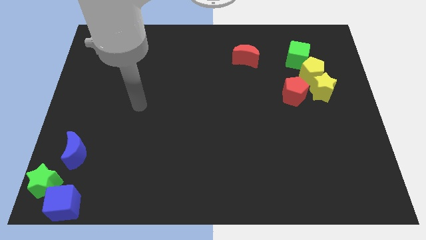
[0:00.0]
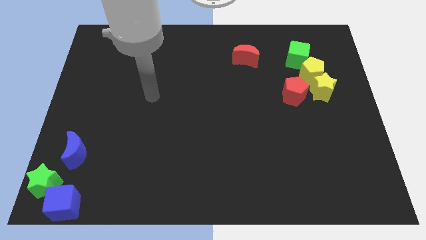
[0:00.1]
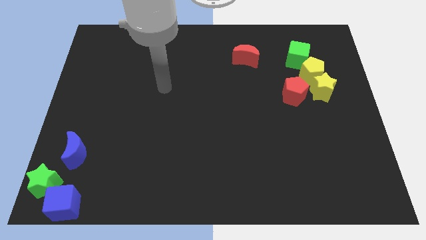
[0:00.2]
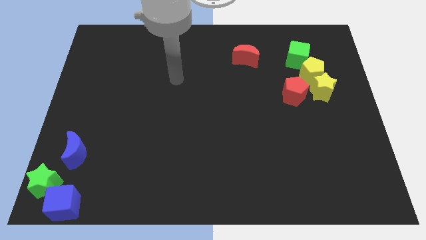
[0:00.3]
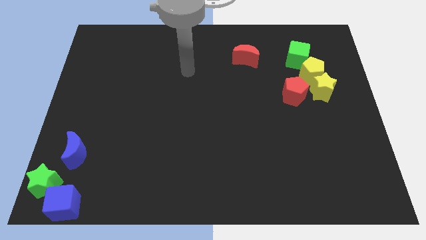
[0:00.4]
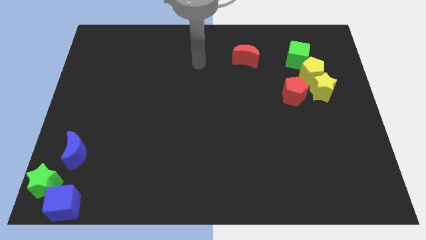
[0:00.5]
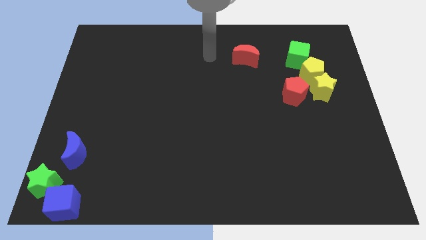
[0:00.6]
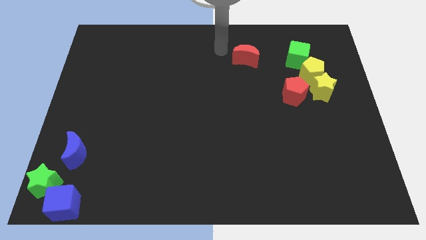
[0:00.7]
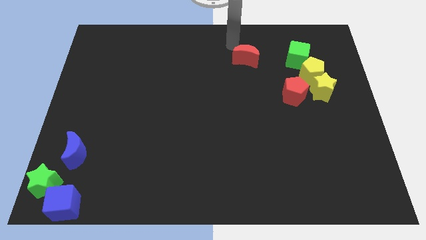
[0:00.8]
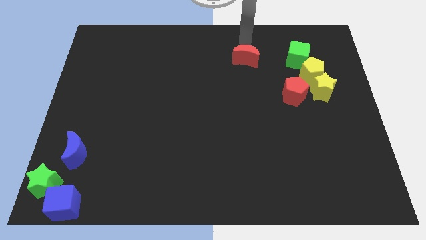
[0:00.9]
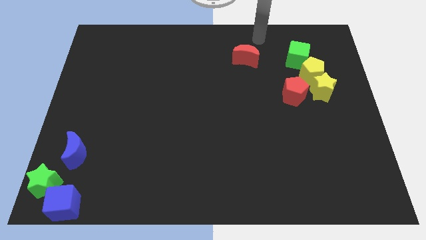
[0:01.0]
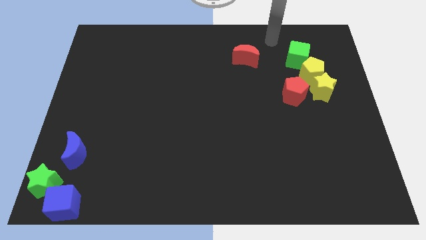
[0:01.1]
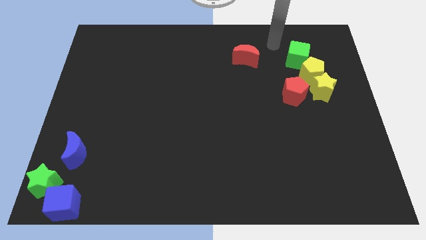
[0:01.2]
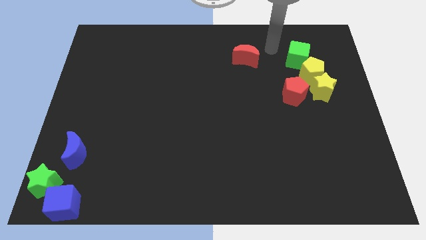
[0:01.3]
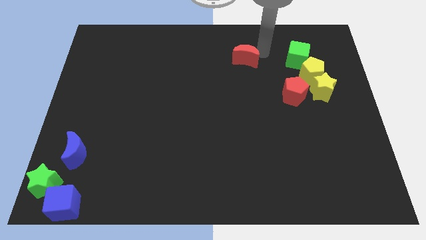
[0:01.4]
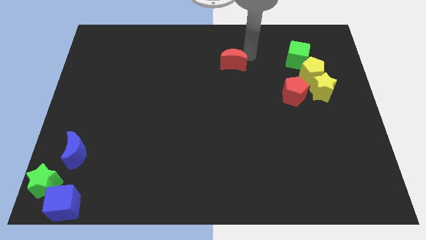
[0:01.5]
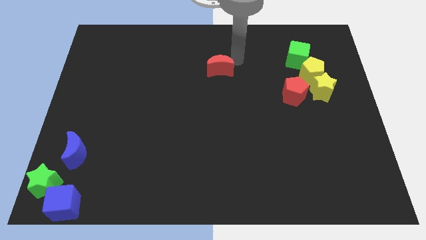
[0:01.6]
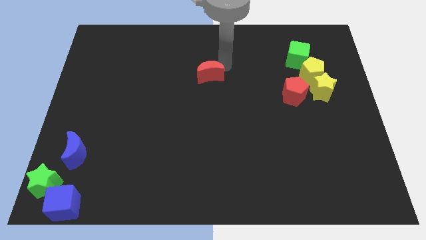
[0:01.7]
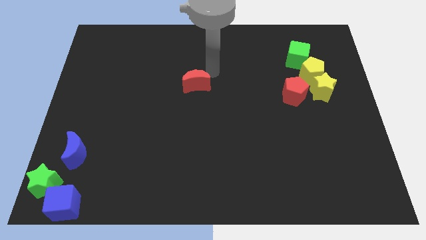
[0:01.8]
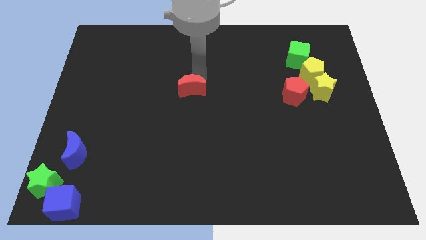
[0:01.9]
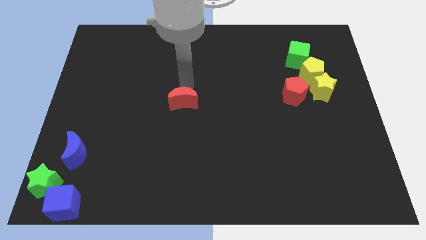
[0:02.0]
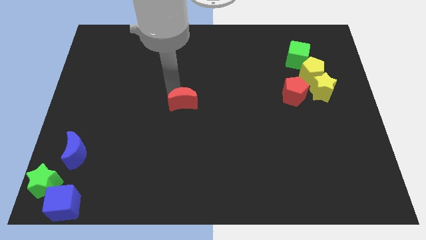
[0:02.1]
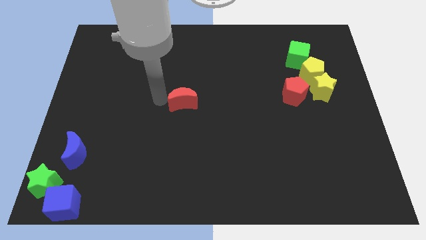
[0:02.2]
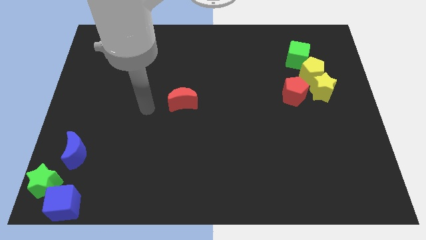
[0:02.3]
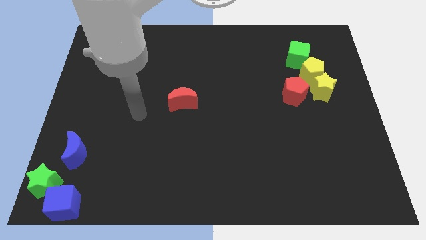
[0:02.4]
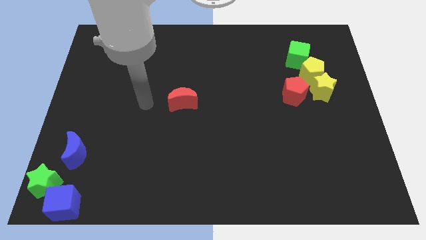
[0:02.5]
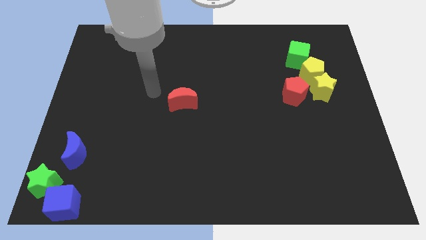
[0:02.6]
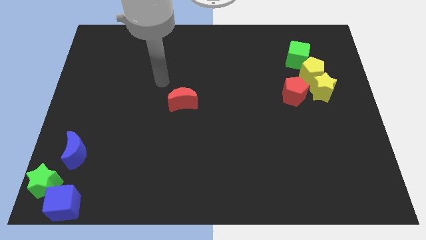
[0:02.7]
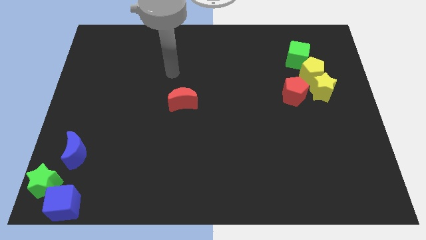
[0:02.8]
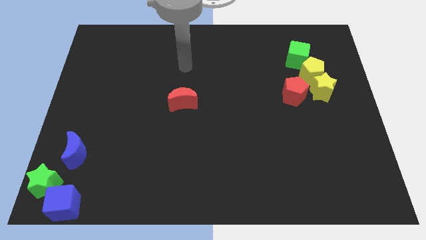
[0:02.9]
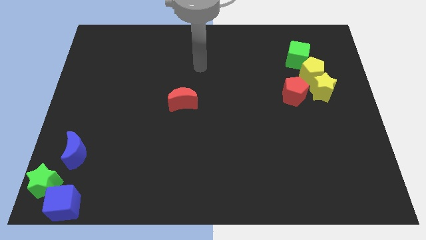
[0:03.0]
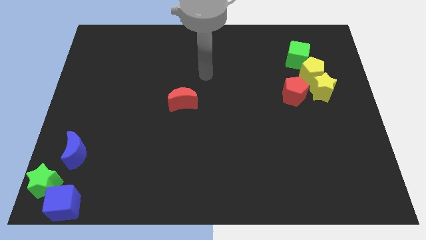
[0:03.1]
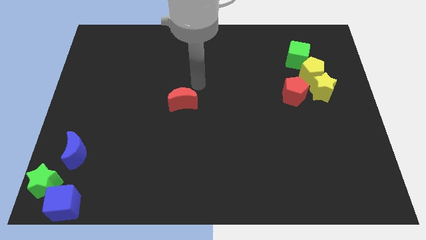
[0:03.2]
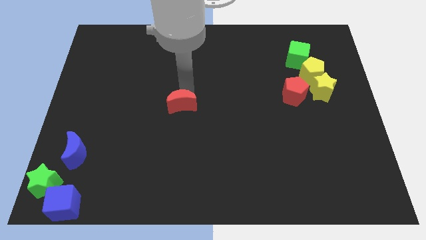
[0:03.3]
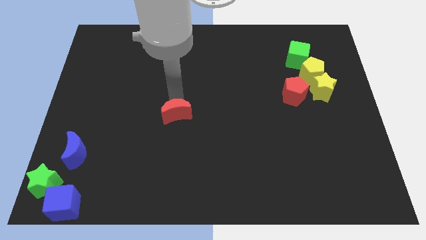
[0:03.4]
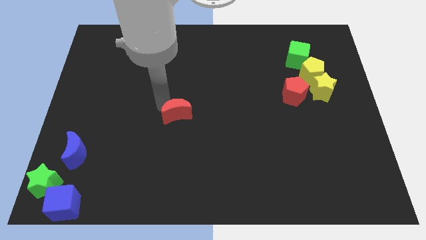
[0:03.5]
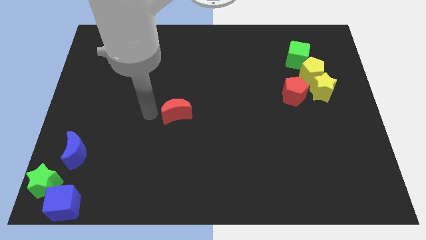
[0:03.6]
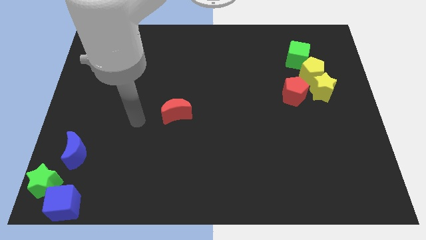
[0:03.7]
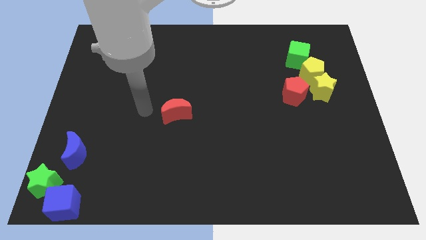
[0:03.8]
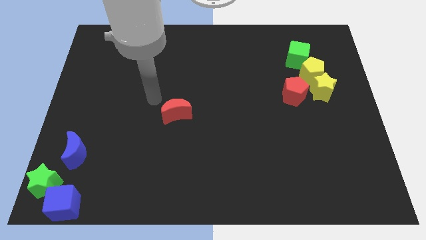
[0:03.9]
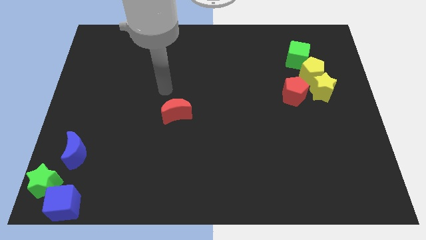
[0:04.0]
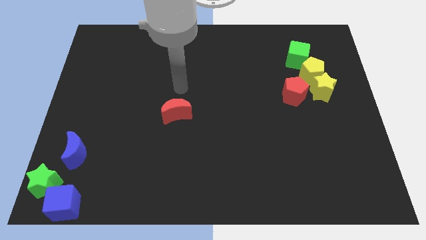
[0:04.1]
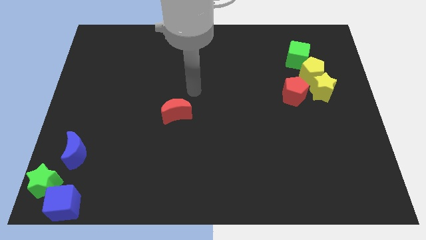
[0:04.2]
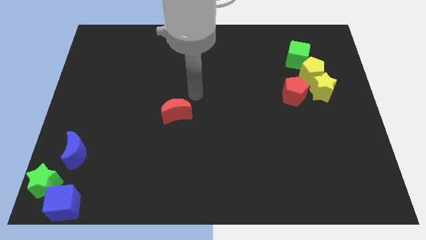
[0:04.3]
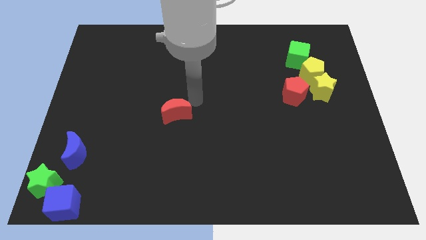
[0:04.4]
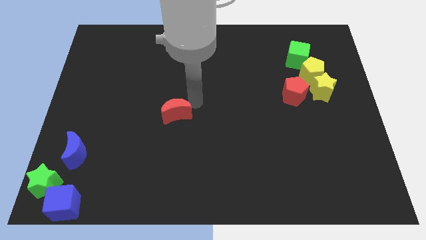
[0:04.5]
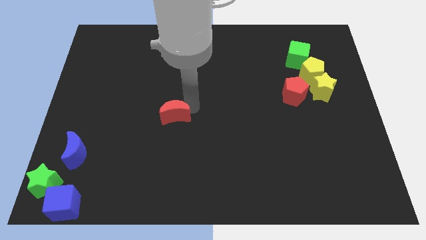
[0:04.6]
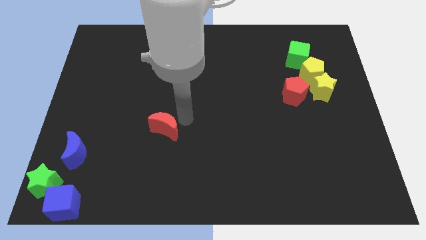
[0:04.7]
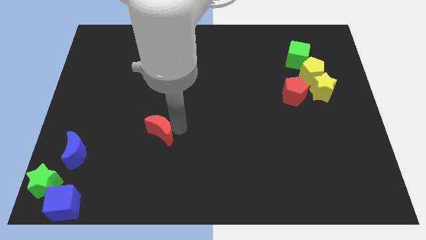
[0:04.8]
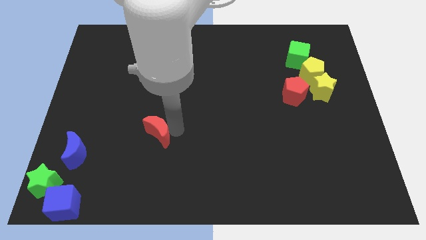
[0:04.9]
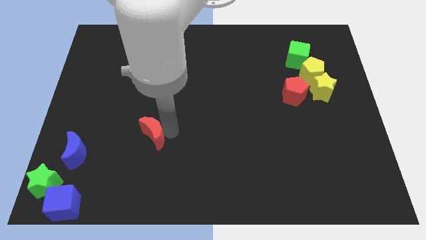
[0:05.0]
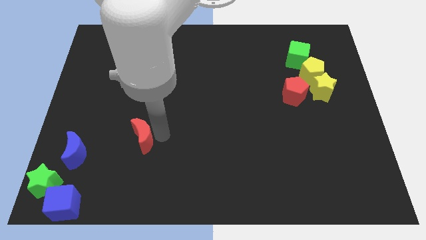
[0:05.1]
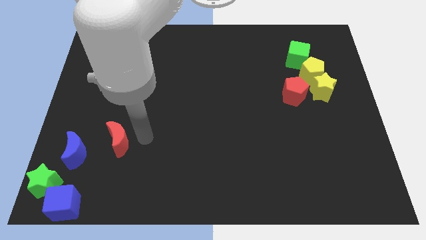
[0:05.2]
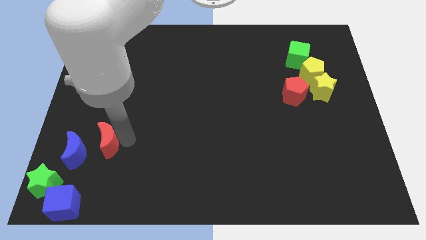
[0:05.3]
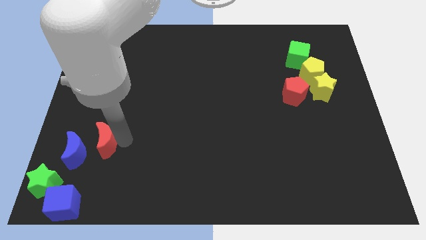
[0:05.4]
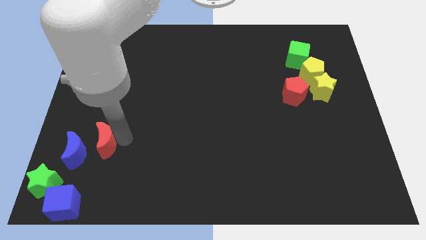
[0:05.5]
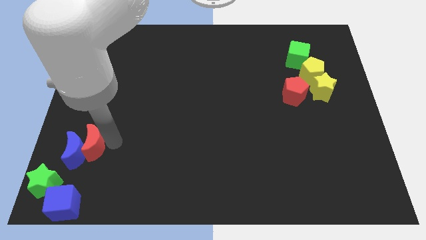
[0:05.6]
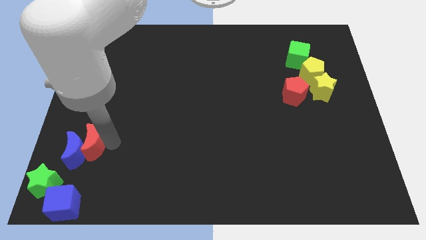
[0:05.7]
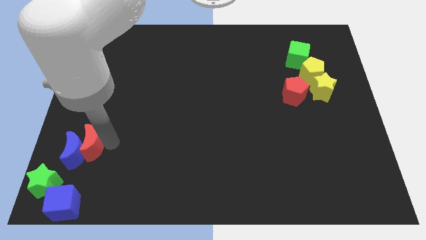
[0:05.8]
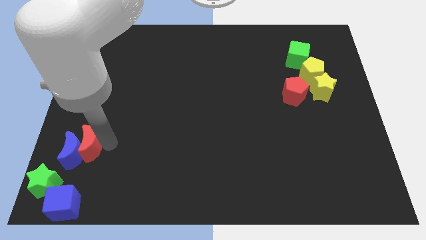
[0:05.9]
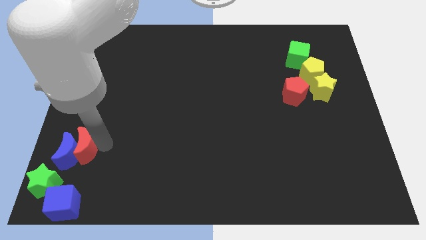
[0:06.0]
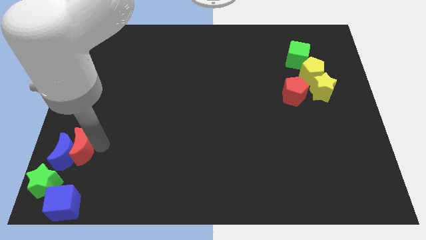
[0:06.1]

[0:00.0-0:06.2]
push the red crescent into the blue crescent

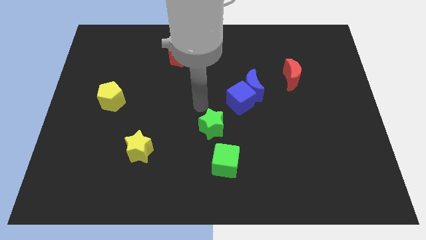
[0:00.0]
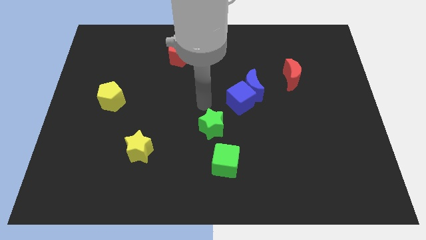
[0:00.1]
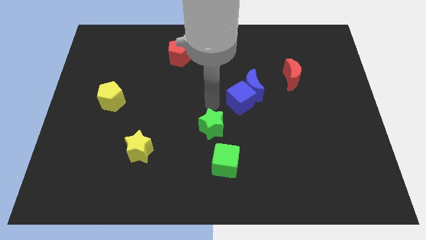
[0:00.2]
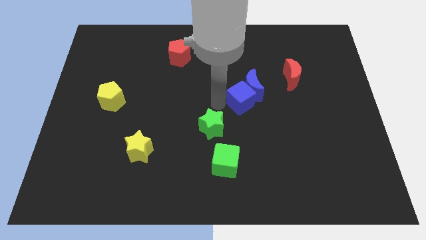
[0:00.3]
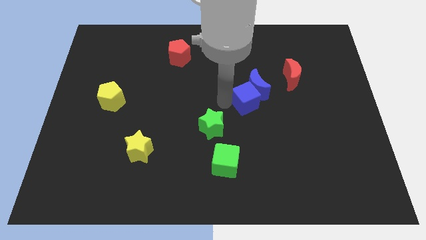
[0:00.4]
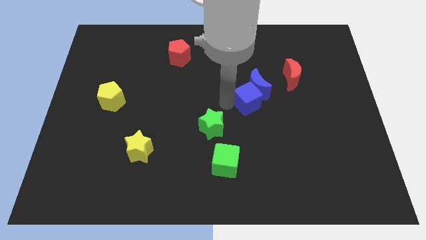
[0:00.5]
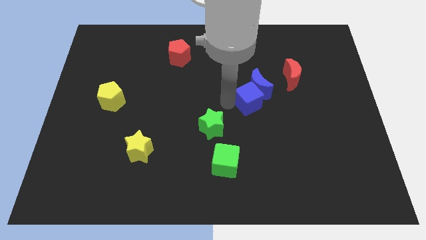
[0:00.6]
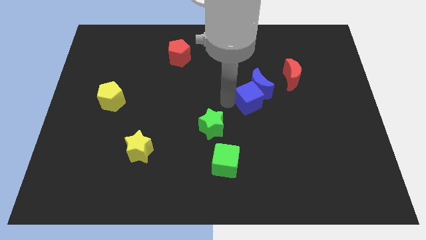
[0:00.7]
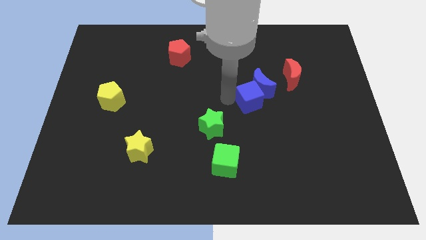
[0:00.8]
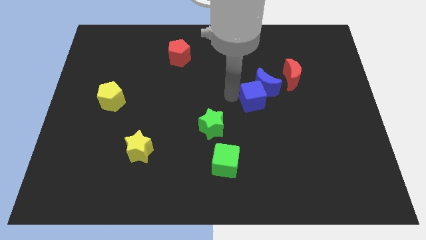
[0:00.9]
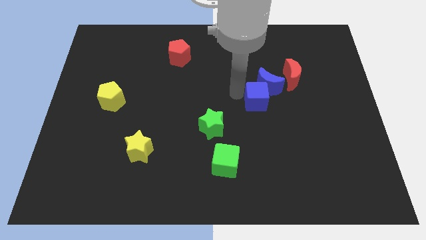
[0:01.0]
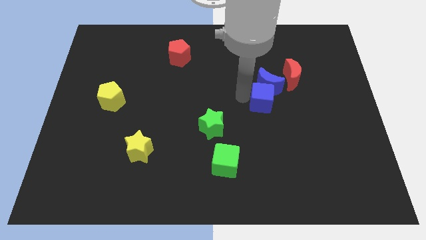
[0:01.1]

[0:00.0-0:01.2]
push the blue crescent near to the red crescent along with the blue cube

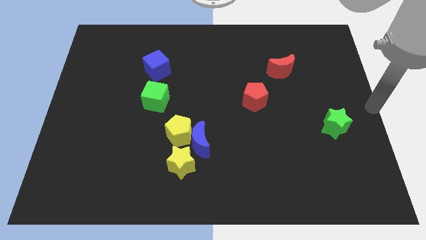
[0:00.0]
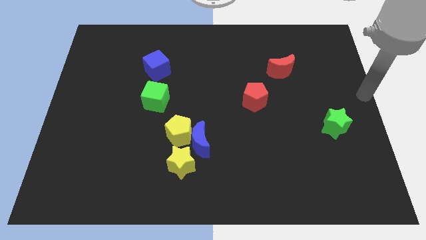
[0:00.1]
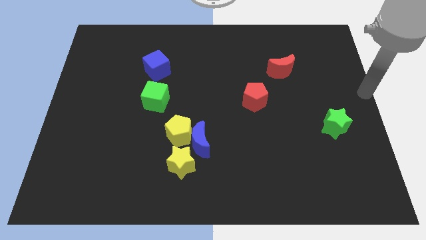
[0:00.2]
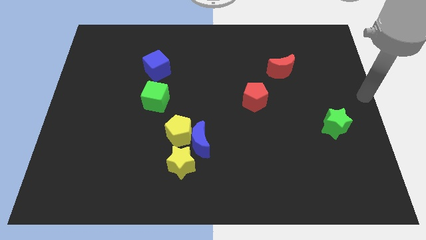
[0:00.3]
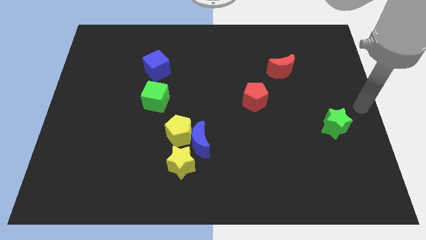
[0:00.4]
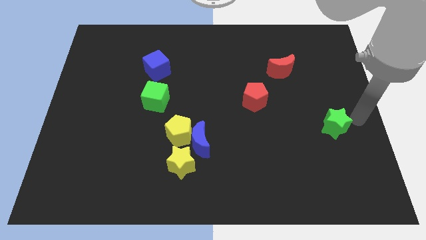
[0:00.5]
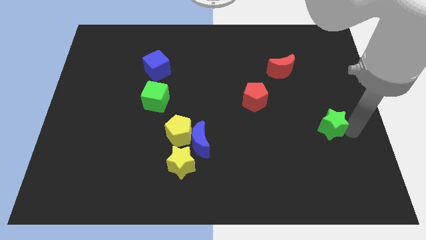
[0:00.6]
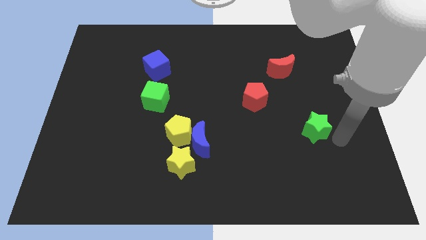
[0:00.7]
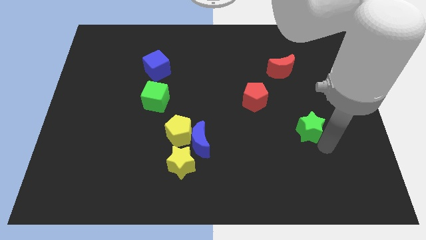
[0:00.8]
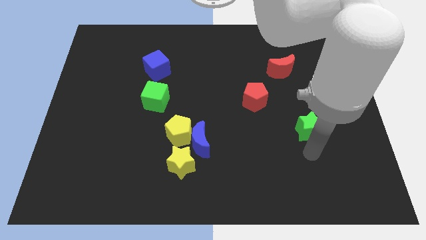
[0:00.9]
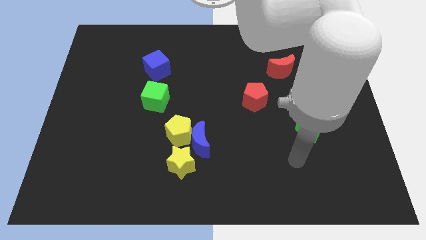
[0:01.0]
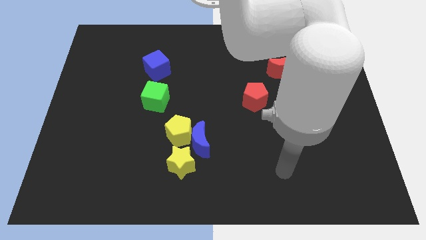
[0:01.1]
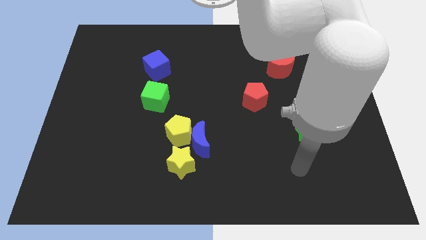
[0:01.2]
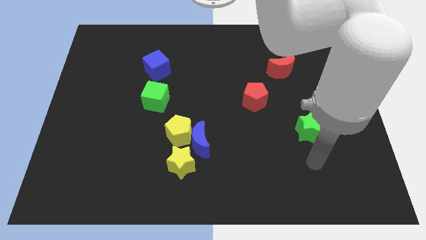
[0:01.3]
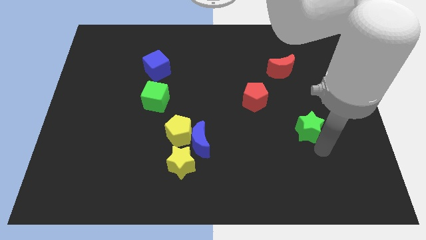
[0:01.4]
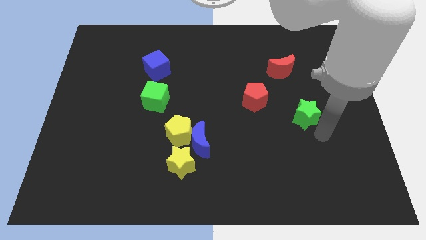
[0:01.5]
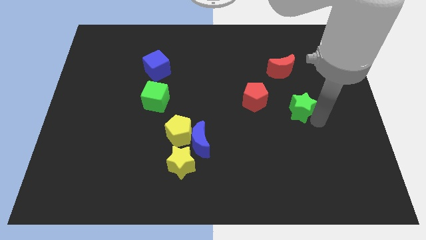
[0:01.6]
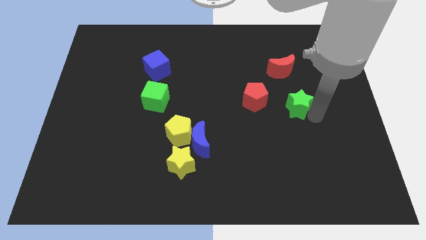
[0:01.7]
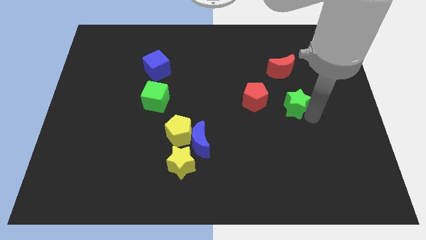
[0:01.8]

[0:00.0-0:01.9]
move the green star parallel right to the red pentagon
